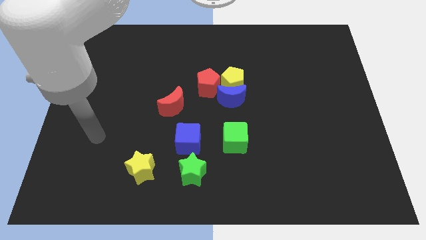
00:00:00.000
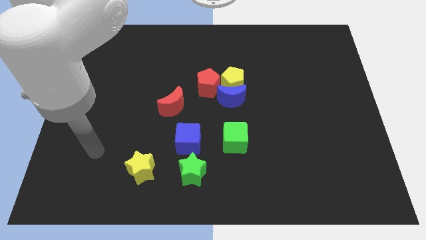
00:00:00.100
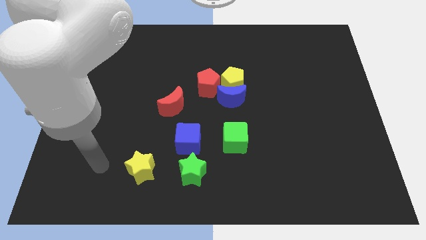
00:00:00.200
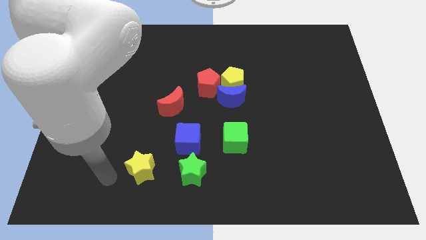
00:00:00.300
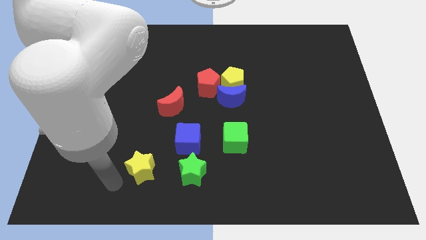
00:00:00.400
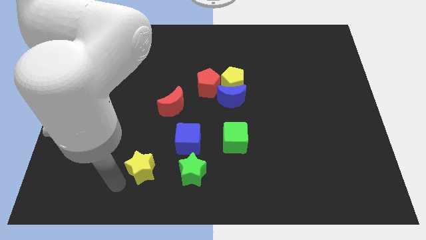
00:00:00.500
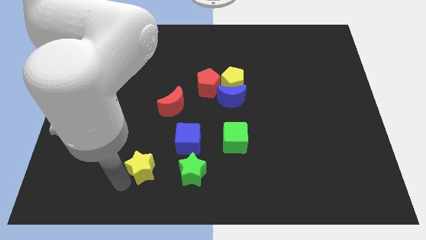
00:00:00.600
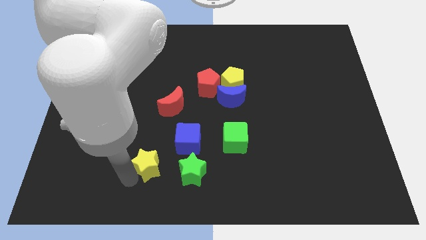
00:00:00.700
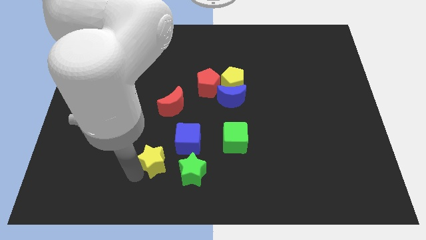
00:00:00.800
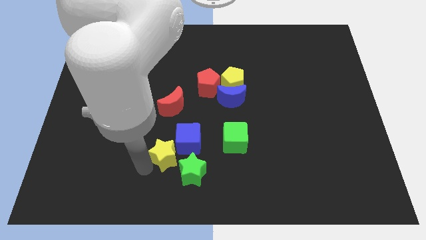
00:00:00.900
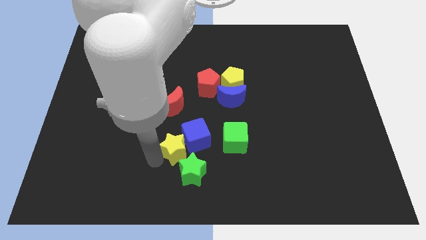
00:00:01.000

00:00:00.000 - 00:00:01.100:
add yellow star to blue cube

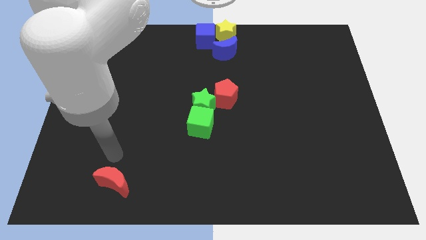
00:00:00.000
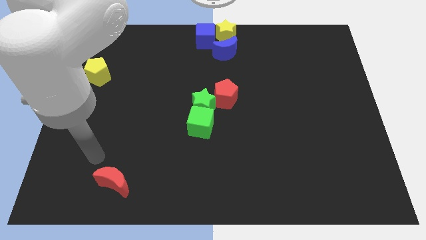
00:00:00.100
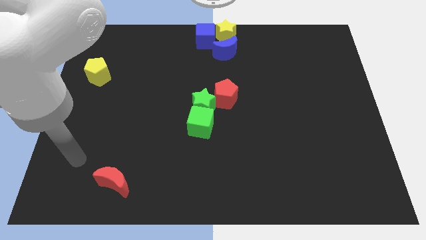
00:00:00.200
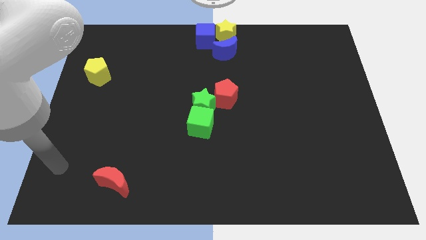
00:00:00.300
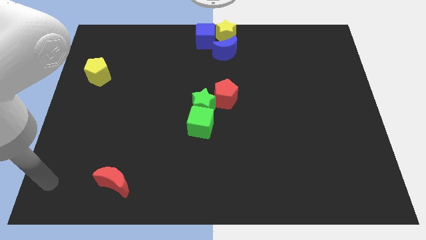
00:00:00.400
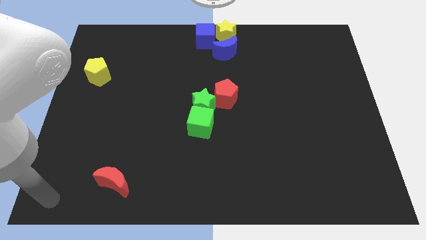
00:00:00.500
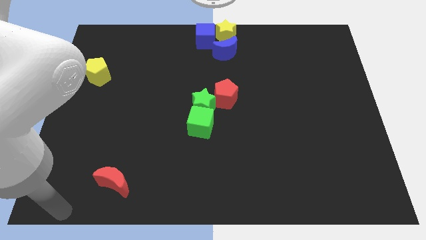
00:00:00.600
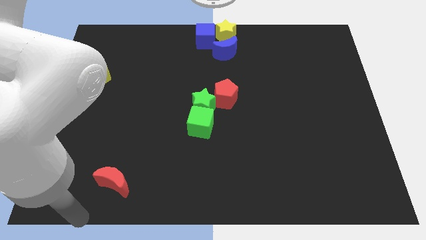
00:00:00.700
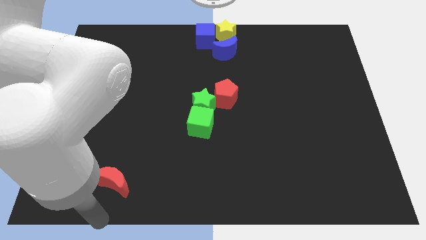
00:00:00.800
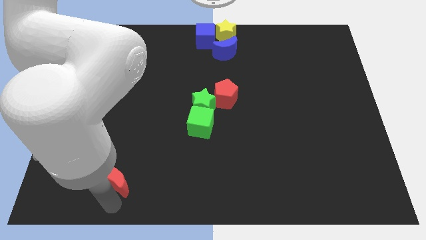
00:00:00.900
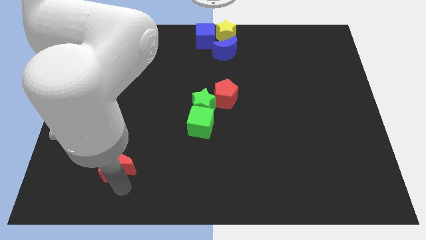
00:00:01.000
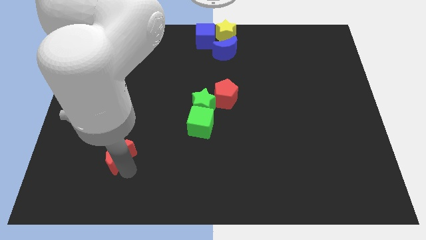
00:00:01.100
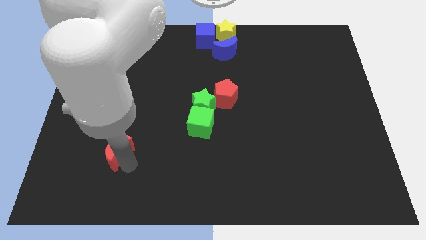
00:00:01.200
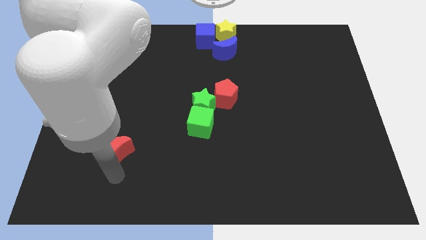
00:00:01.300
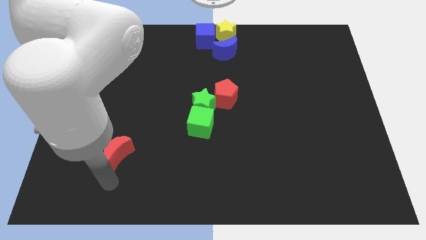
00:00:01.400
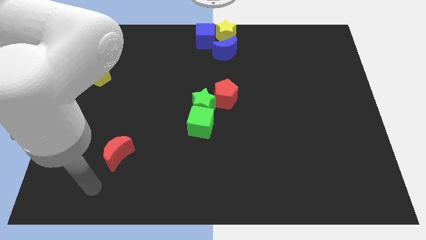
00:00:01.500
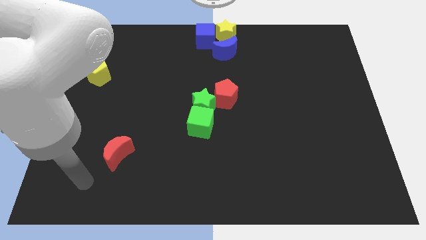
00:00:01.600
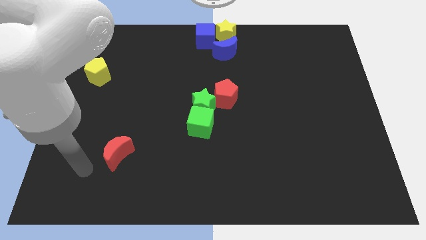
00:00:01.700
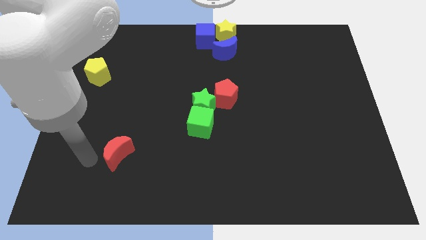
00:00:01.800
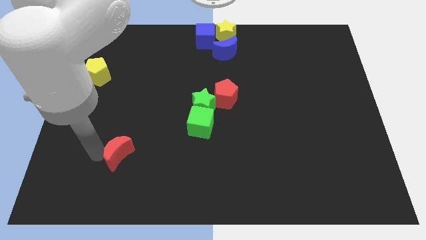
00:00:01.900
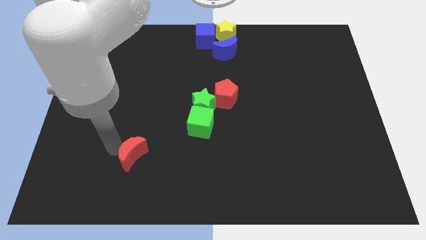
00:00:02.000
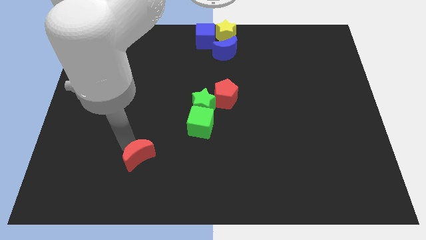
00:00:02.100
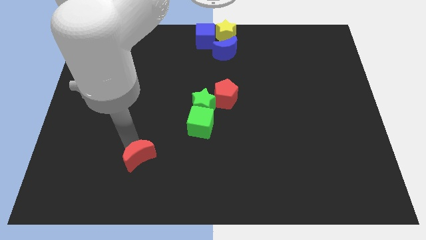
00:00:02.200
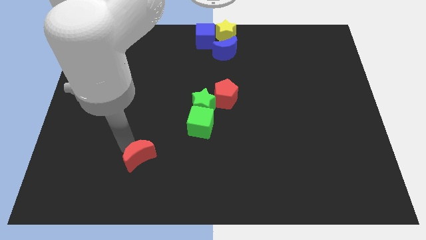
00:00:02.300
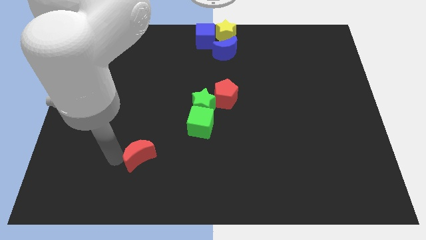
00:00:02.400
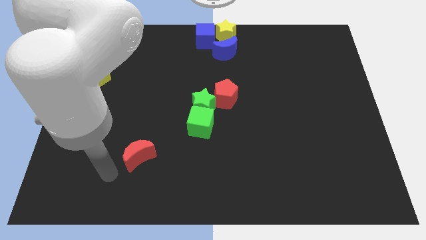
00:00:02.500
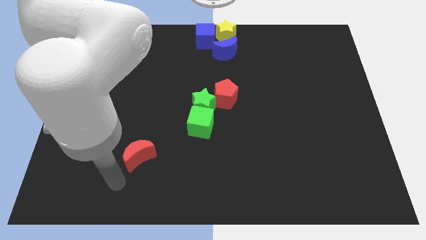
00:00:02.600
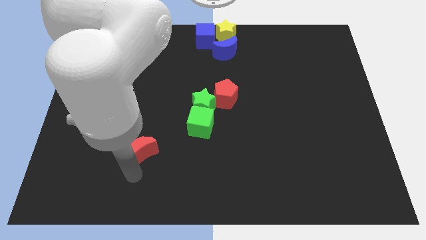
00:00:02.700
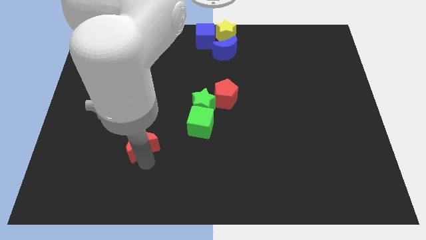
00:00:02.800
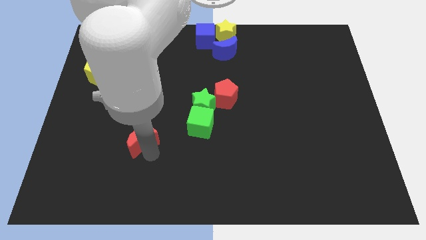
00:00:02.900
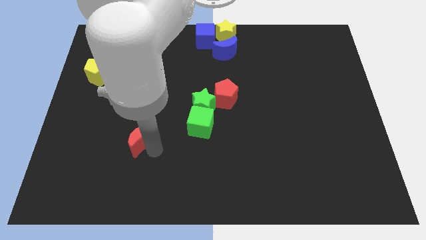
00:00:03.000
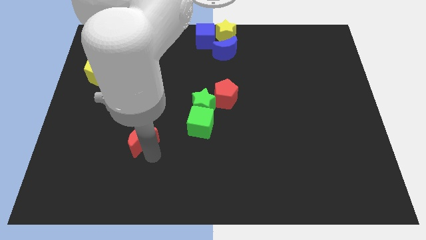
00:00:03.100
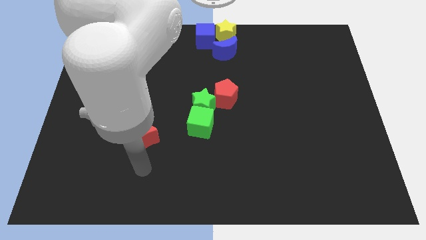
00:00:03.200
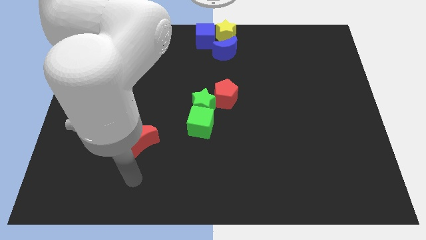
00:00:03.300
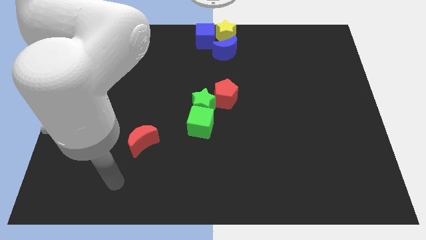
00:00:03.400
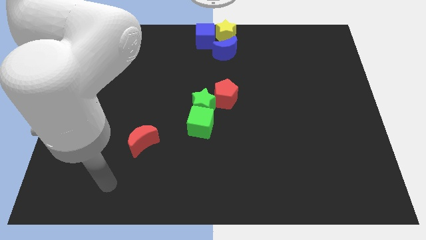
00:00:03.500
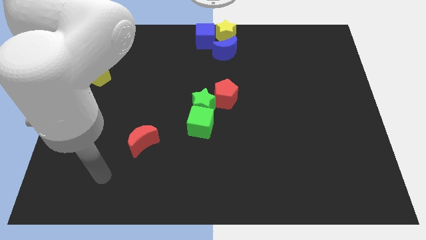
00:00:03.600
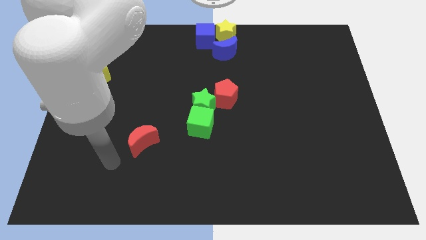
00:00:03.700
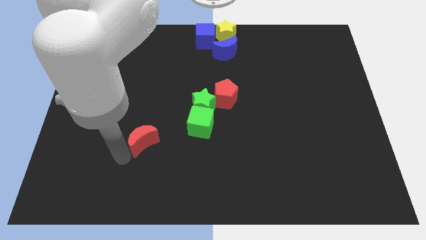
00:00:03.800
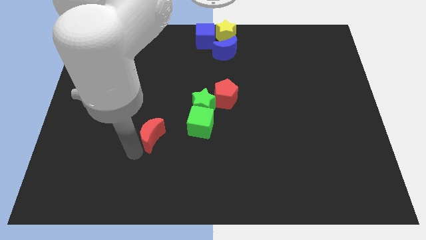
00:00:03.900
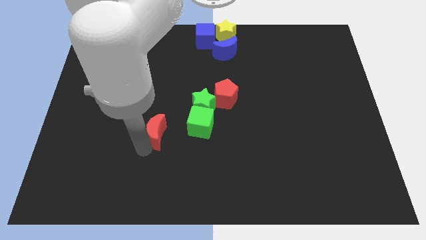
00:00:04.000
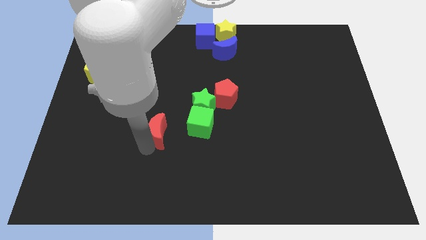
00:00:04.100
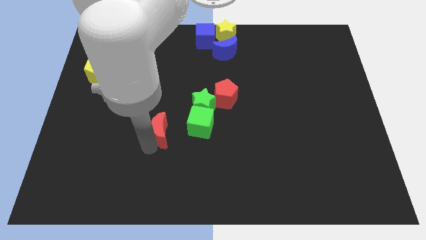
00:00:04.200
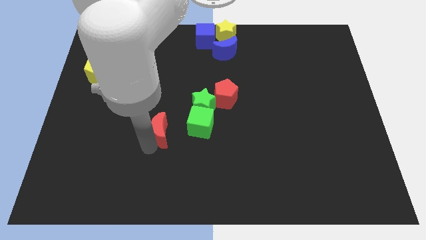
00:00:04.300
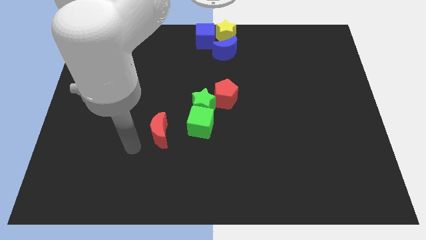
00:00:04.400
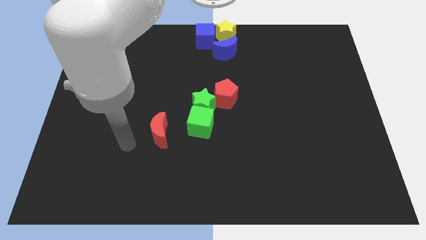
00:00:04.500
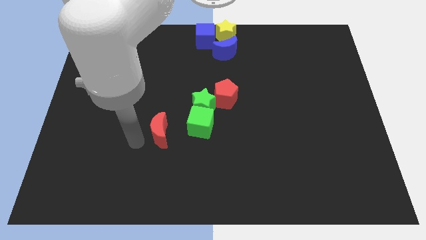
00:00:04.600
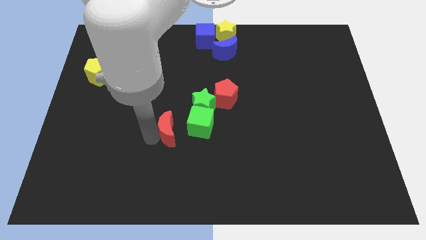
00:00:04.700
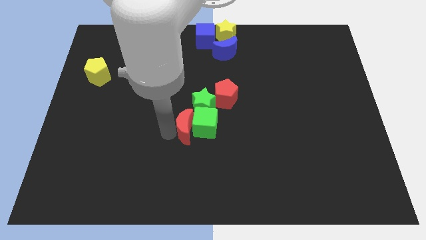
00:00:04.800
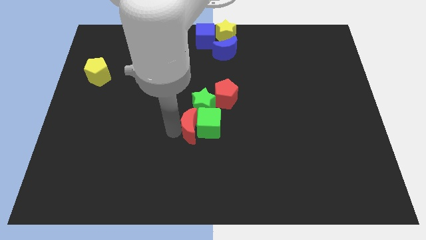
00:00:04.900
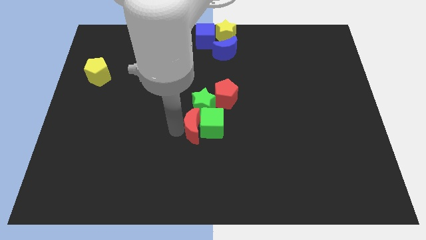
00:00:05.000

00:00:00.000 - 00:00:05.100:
slide the red moon into the green cube

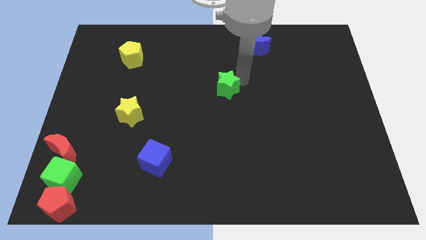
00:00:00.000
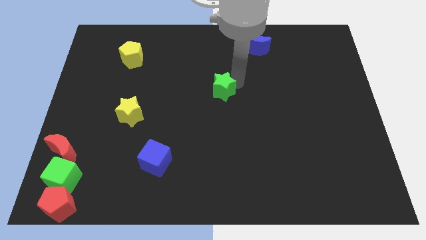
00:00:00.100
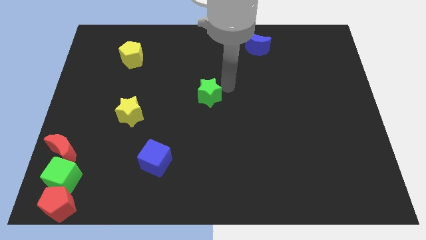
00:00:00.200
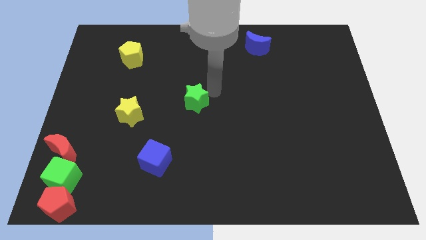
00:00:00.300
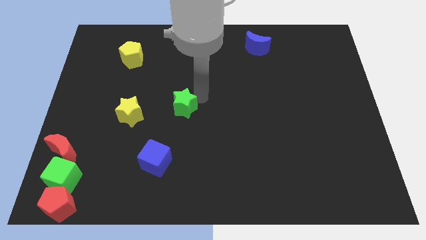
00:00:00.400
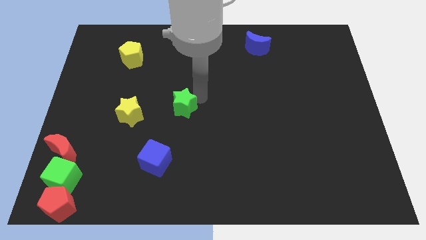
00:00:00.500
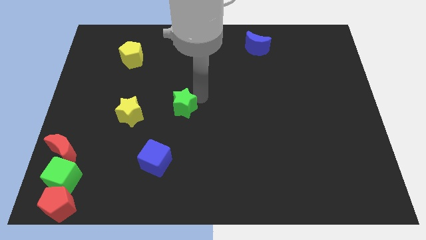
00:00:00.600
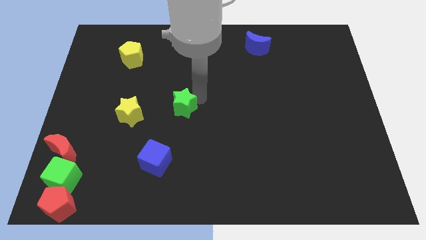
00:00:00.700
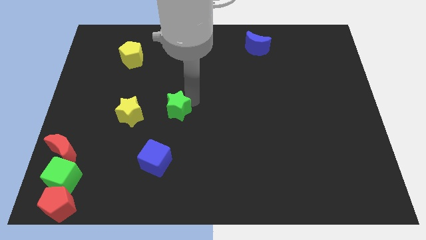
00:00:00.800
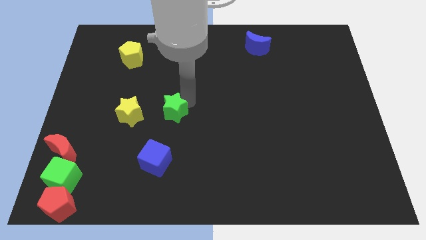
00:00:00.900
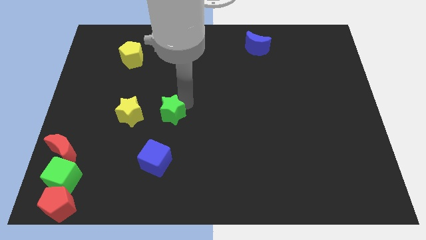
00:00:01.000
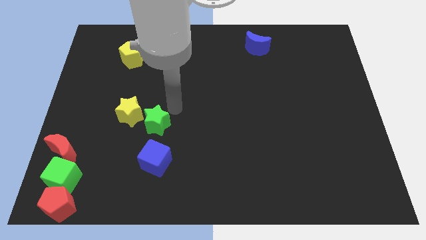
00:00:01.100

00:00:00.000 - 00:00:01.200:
place green star right to the yellow star

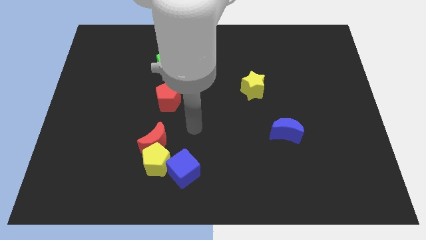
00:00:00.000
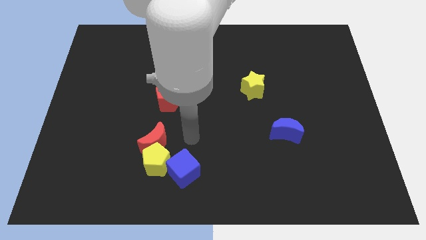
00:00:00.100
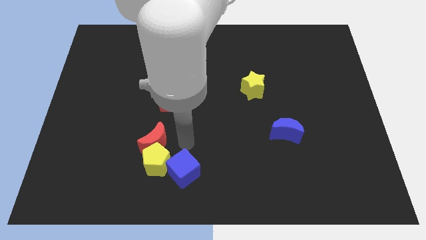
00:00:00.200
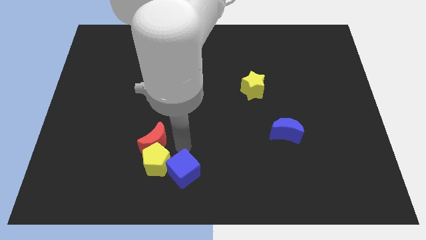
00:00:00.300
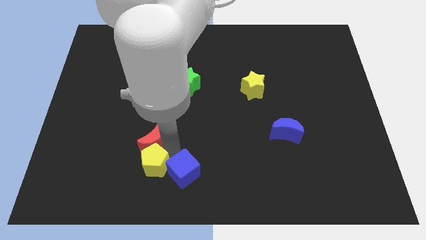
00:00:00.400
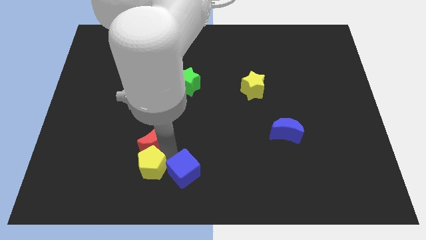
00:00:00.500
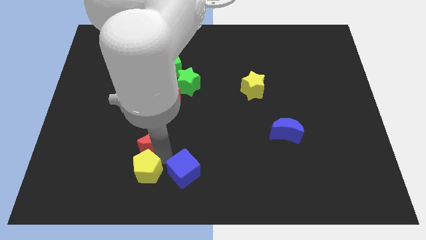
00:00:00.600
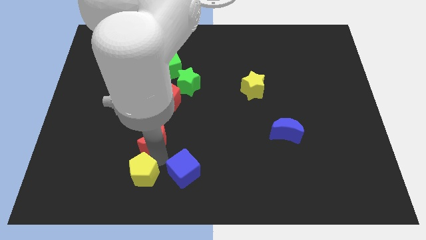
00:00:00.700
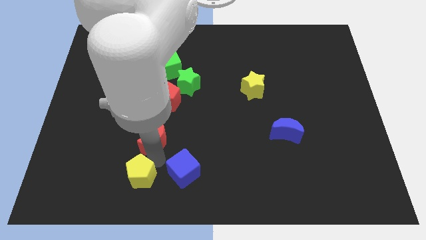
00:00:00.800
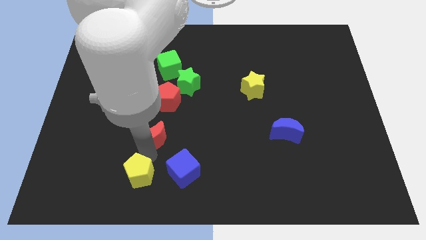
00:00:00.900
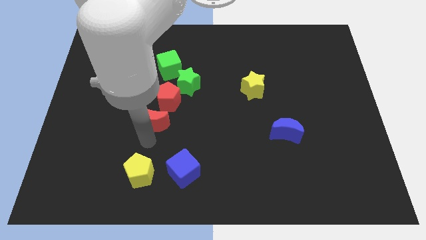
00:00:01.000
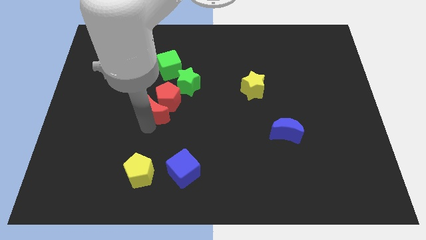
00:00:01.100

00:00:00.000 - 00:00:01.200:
separate yellow pentagon and red crescent

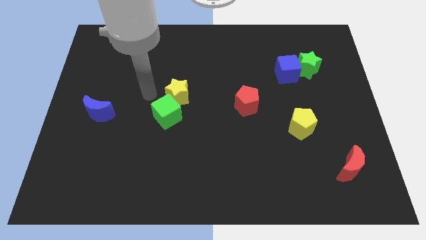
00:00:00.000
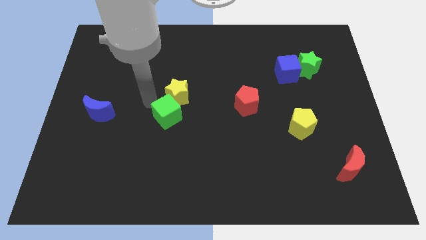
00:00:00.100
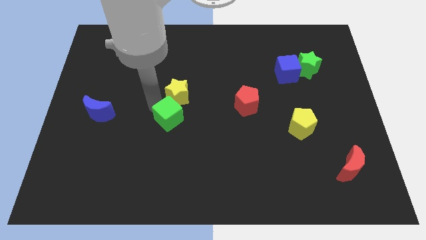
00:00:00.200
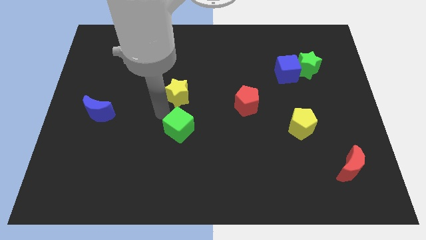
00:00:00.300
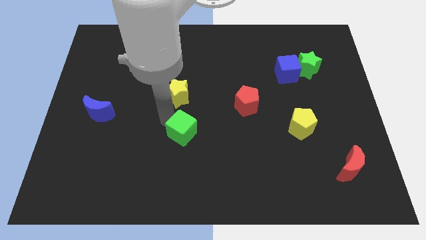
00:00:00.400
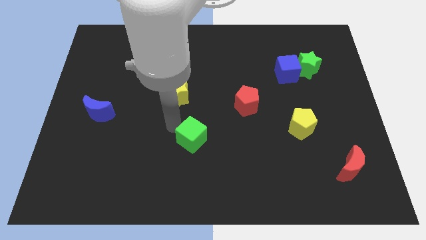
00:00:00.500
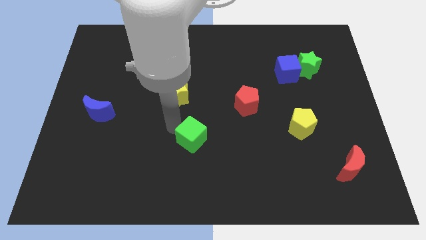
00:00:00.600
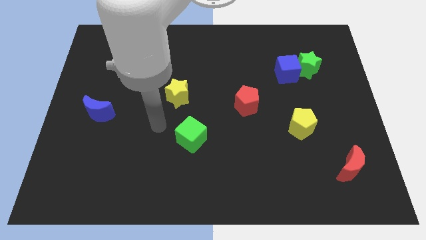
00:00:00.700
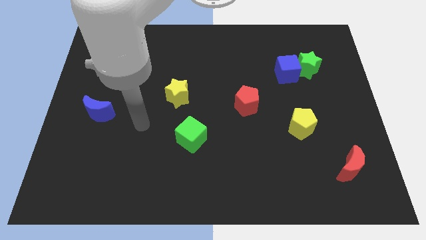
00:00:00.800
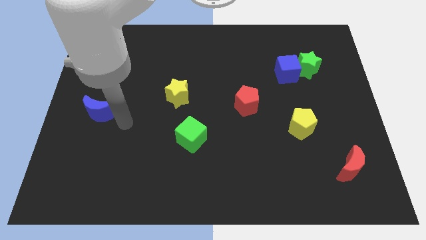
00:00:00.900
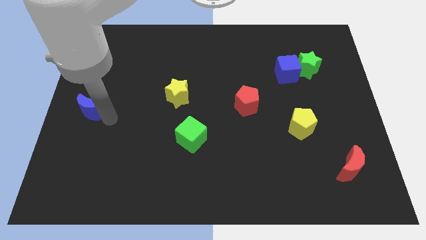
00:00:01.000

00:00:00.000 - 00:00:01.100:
place the green cube left to the yellow pentagon
